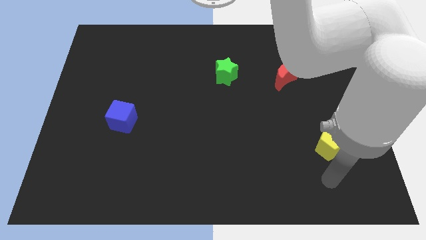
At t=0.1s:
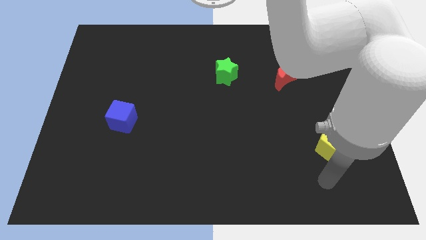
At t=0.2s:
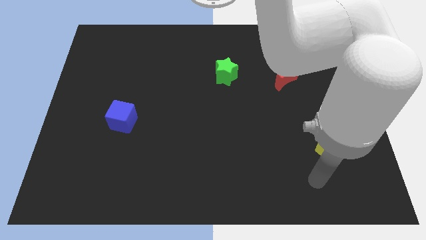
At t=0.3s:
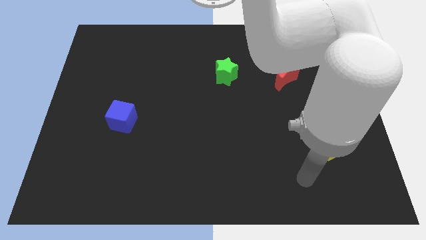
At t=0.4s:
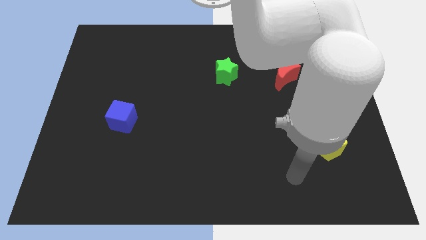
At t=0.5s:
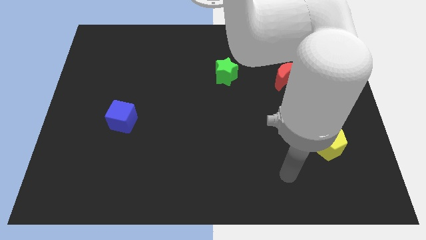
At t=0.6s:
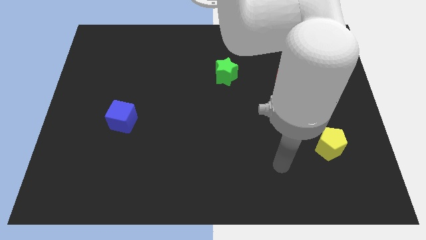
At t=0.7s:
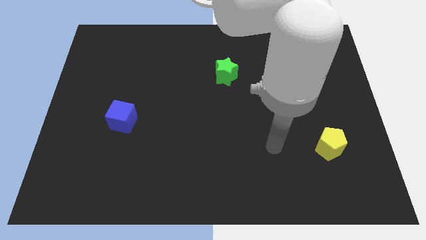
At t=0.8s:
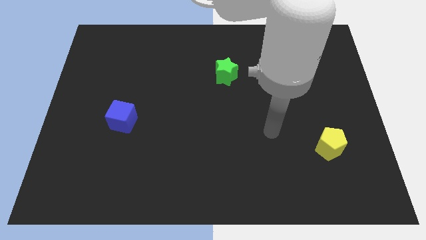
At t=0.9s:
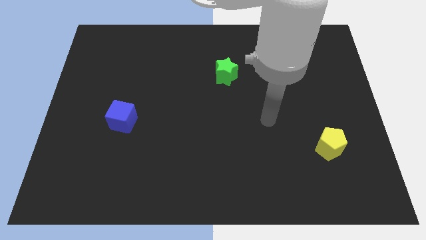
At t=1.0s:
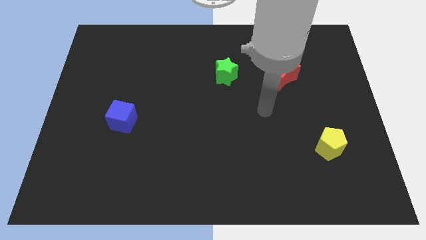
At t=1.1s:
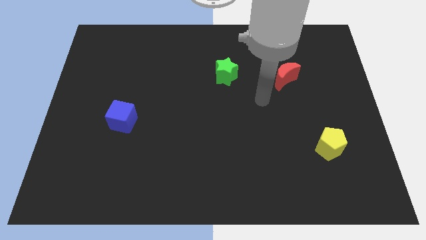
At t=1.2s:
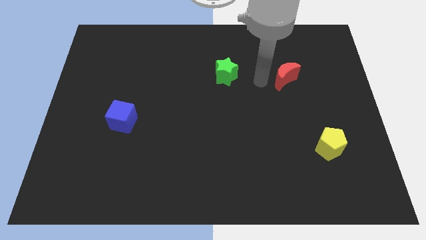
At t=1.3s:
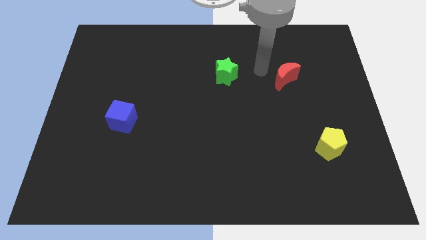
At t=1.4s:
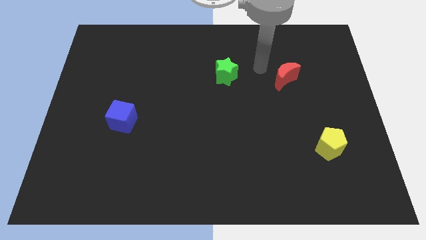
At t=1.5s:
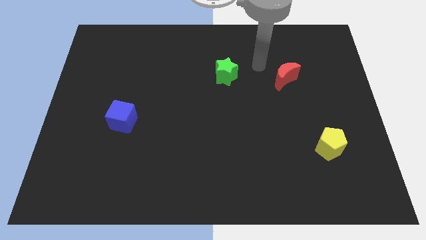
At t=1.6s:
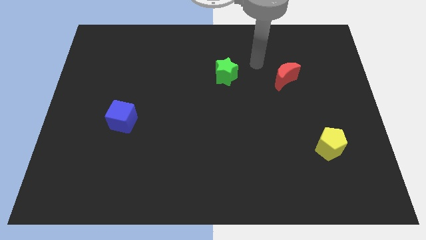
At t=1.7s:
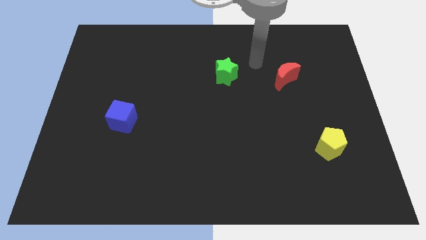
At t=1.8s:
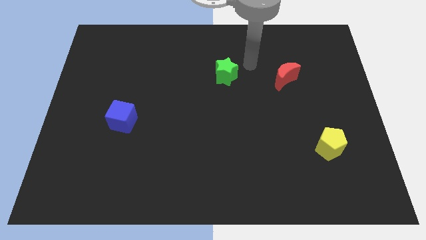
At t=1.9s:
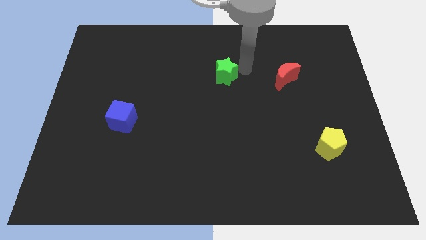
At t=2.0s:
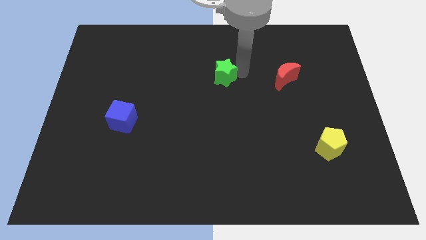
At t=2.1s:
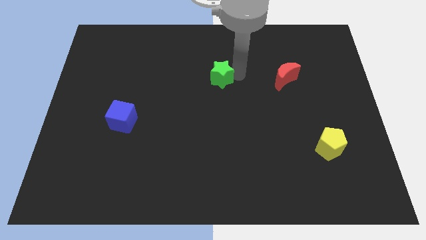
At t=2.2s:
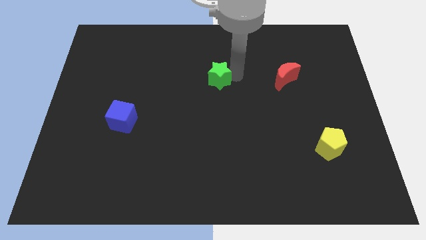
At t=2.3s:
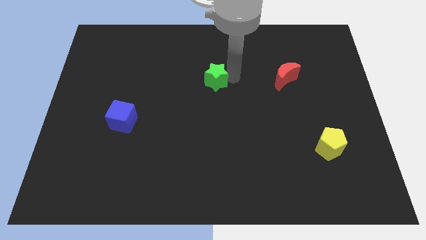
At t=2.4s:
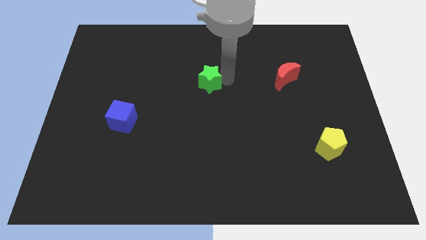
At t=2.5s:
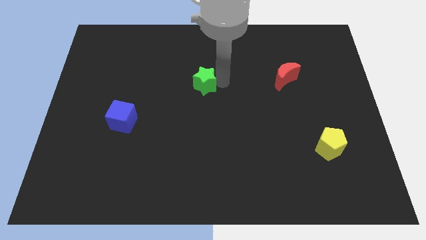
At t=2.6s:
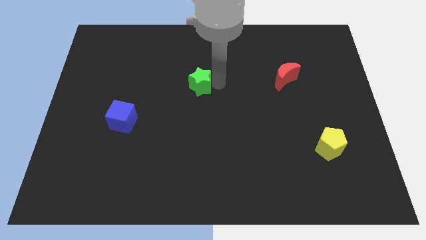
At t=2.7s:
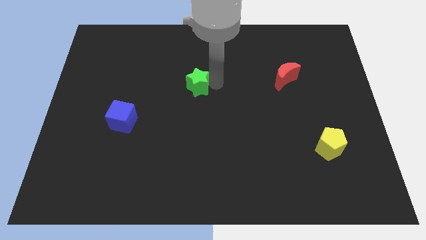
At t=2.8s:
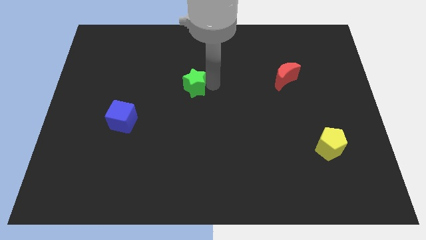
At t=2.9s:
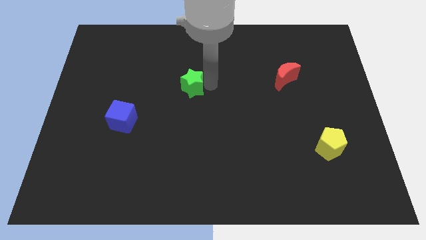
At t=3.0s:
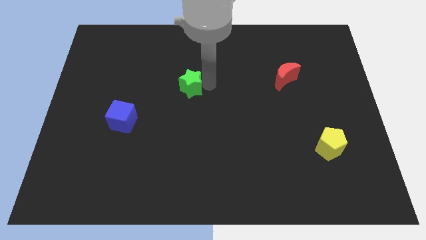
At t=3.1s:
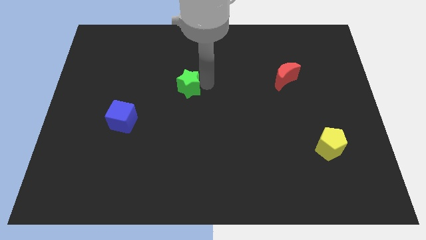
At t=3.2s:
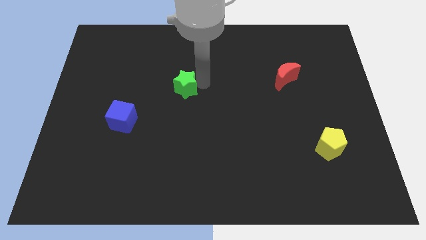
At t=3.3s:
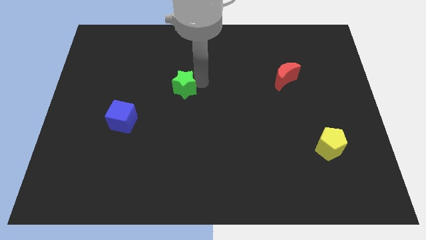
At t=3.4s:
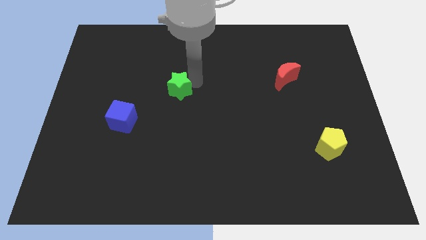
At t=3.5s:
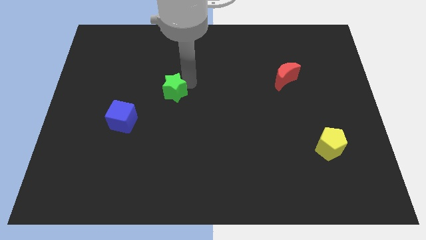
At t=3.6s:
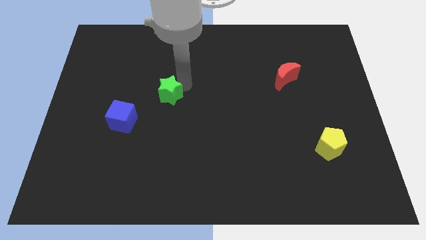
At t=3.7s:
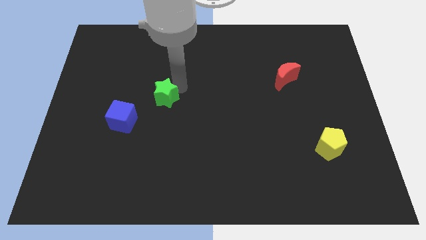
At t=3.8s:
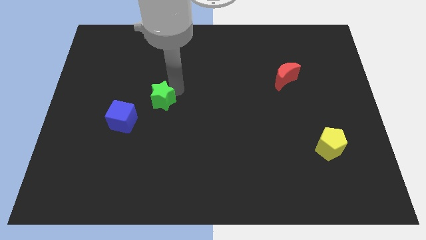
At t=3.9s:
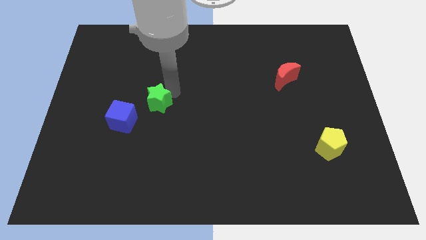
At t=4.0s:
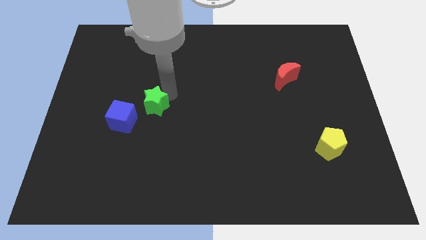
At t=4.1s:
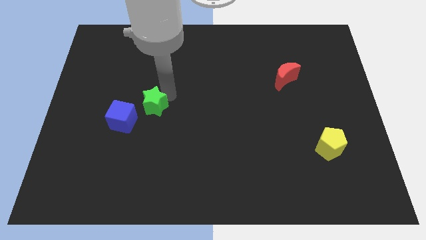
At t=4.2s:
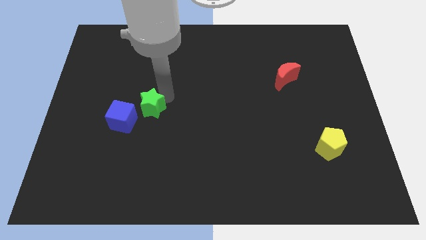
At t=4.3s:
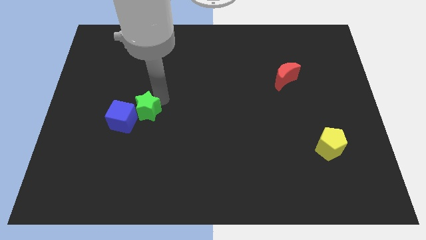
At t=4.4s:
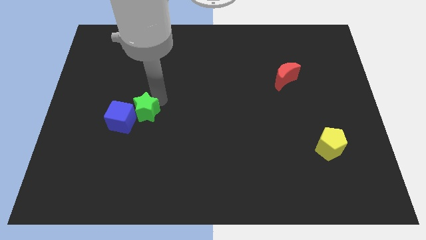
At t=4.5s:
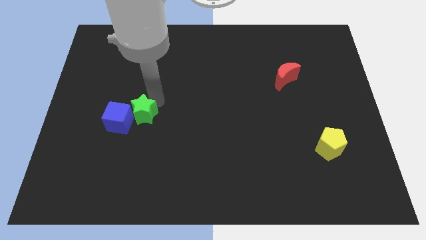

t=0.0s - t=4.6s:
slide the green star next to the blue block

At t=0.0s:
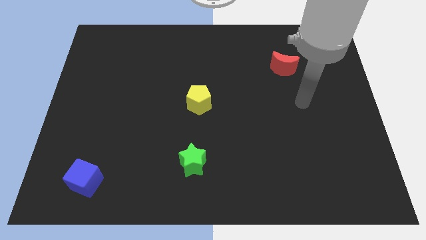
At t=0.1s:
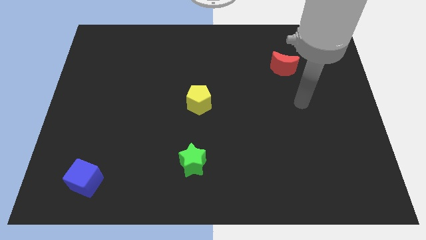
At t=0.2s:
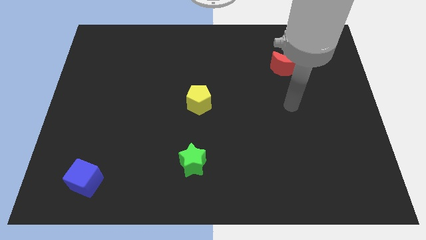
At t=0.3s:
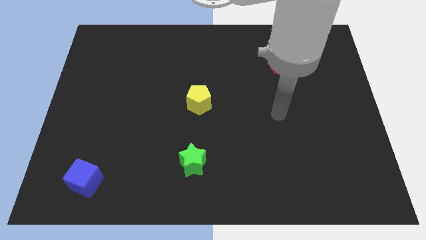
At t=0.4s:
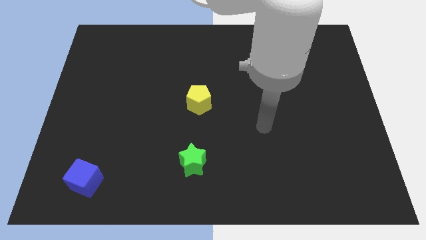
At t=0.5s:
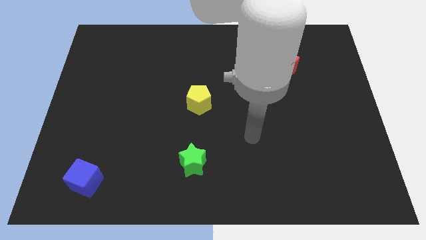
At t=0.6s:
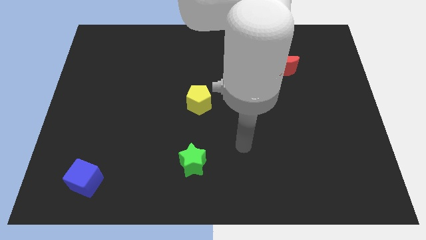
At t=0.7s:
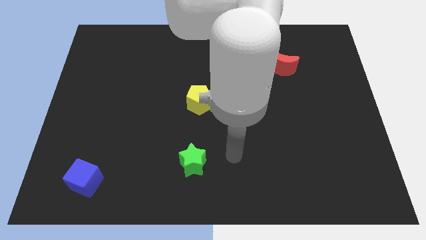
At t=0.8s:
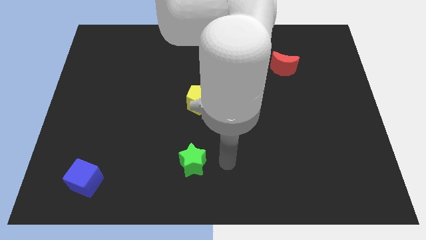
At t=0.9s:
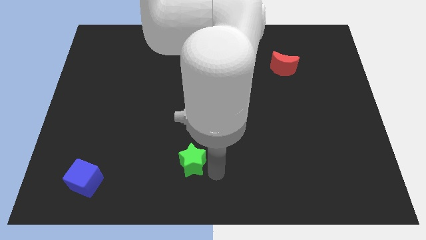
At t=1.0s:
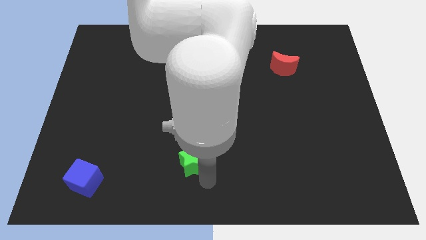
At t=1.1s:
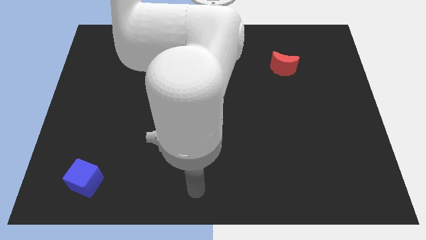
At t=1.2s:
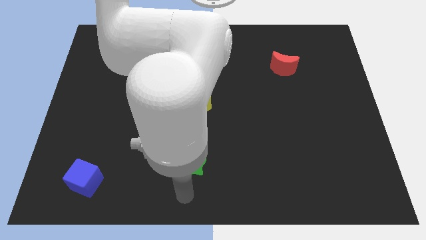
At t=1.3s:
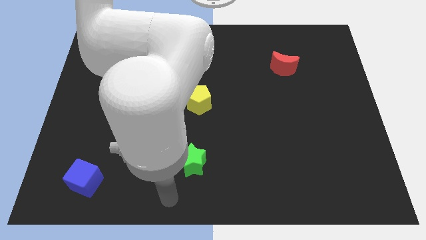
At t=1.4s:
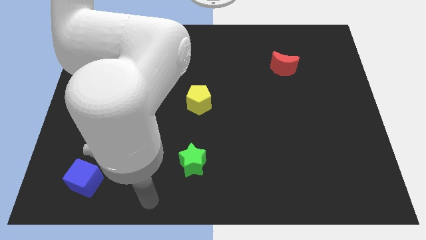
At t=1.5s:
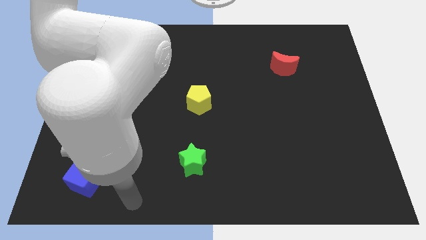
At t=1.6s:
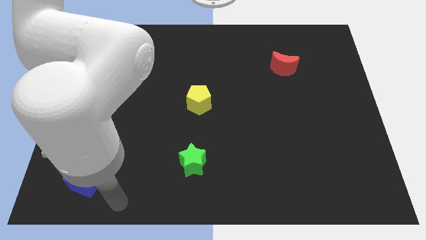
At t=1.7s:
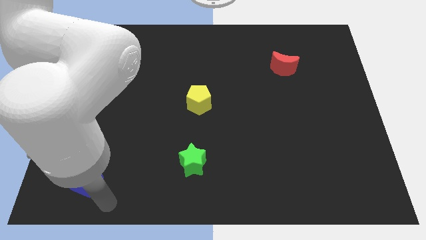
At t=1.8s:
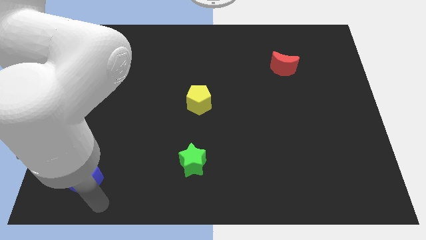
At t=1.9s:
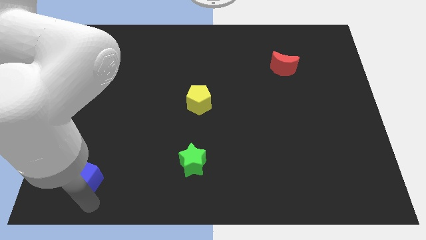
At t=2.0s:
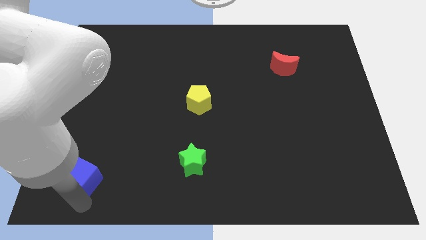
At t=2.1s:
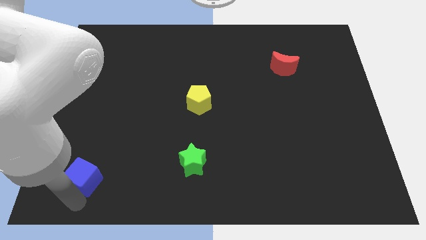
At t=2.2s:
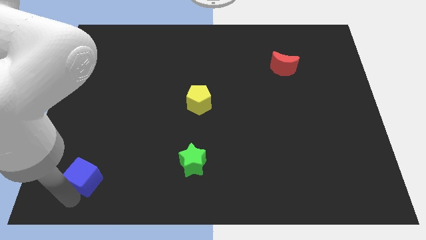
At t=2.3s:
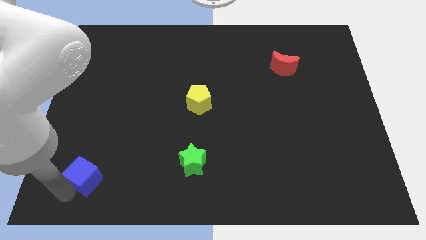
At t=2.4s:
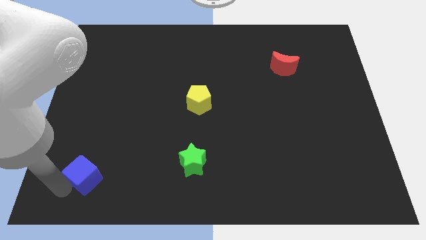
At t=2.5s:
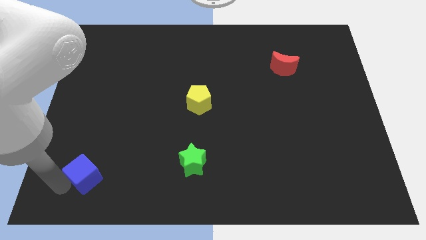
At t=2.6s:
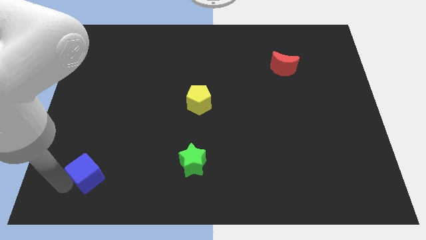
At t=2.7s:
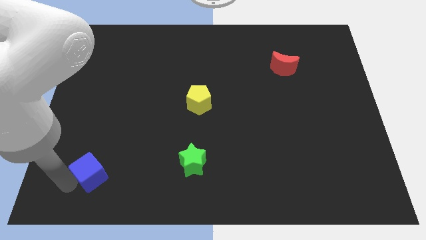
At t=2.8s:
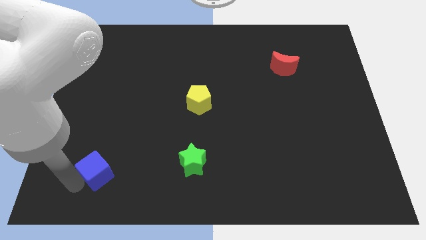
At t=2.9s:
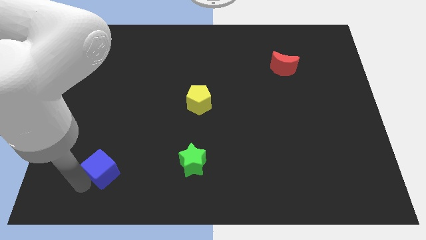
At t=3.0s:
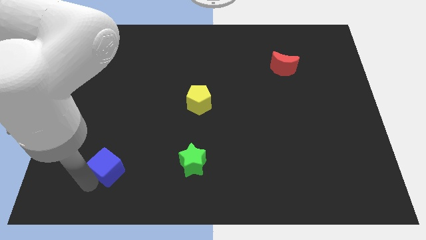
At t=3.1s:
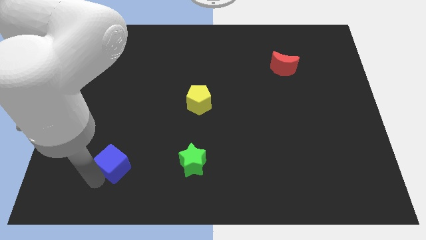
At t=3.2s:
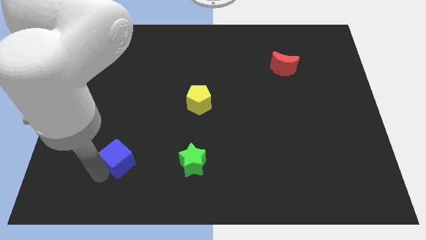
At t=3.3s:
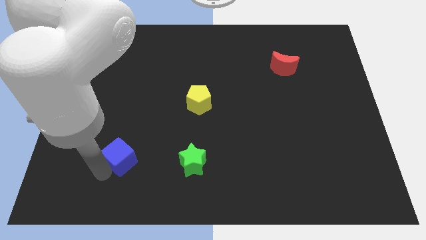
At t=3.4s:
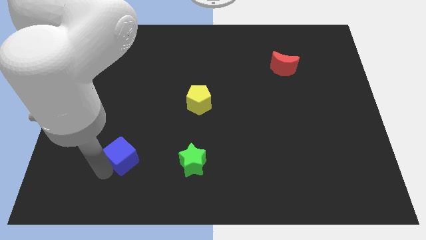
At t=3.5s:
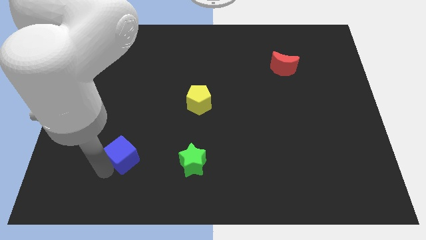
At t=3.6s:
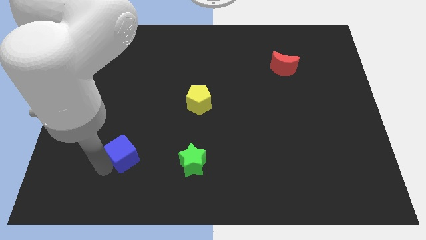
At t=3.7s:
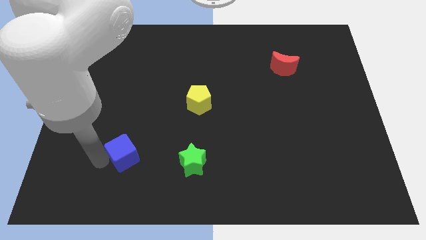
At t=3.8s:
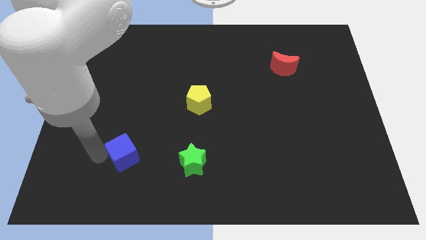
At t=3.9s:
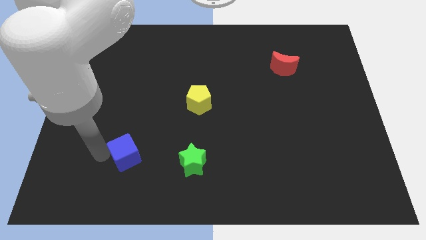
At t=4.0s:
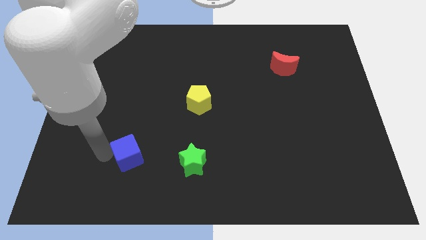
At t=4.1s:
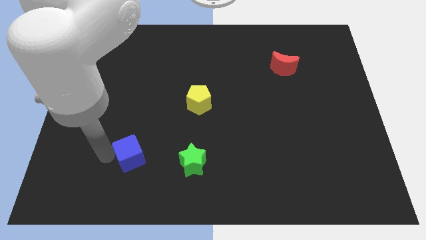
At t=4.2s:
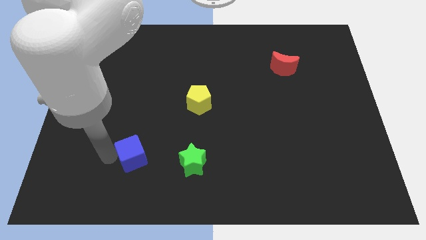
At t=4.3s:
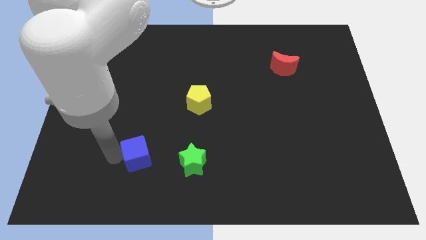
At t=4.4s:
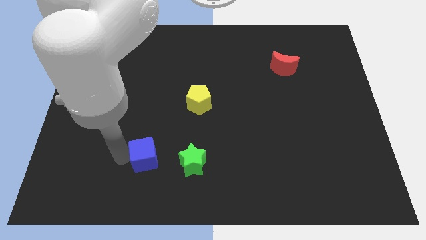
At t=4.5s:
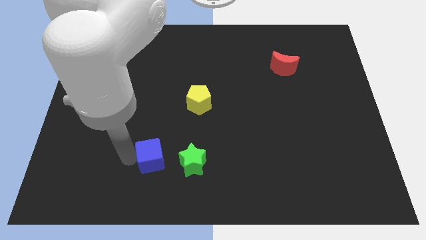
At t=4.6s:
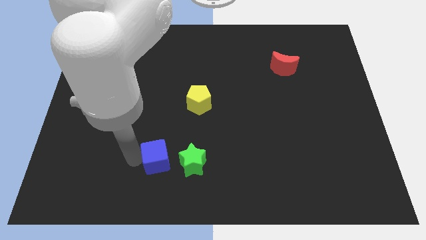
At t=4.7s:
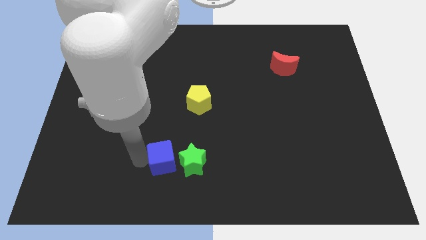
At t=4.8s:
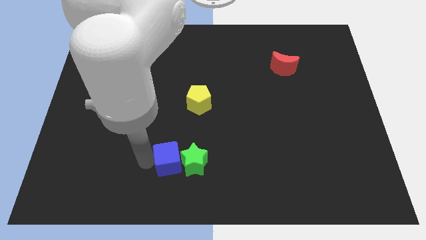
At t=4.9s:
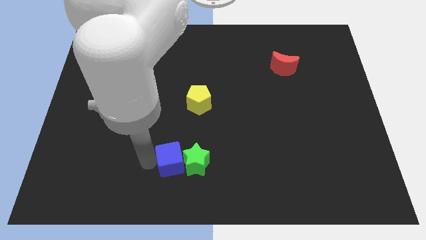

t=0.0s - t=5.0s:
move the blue block towards the green block
